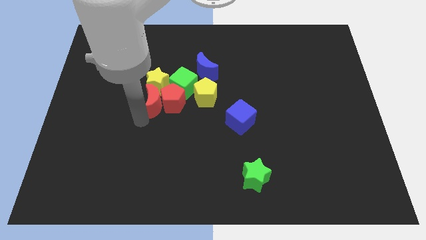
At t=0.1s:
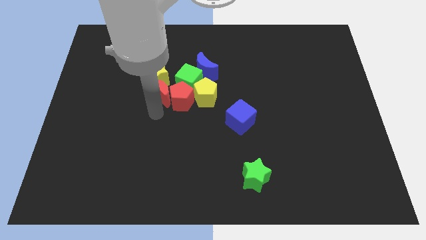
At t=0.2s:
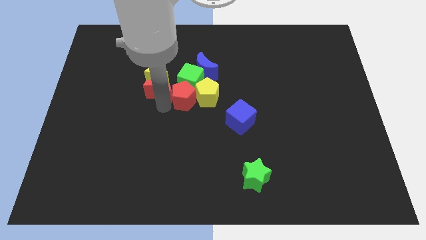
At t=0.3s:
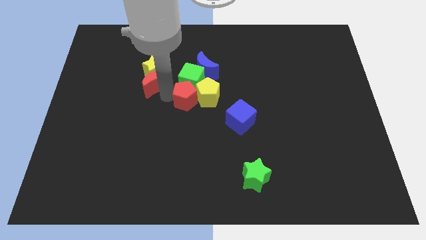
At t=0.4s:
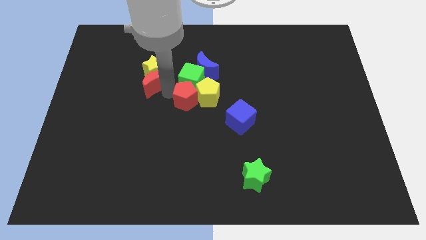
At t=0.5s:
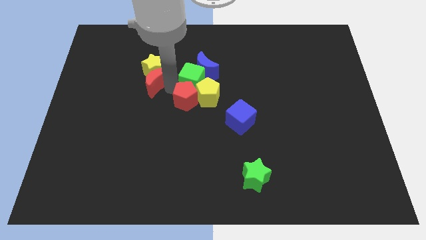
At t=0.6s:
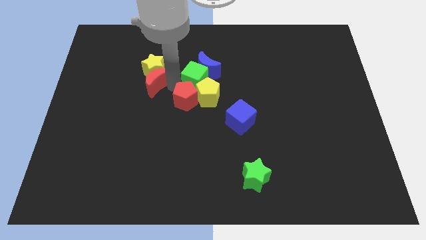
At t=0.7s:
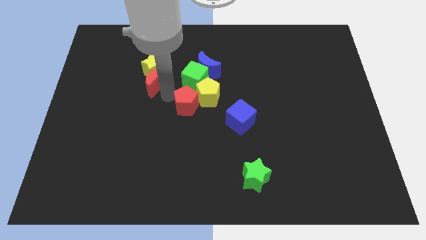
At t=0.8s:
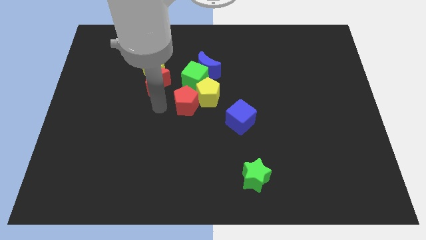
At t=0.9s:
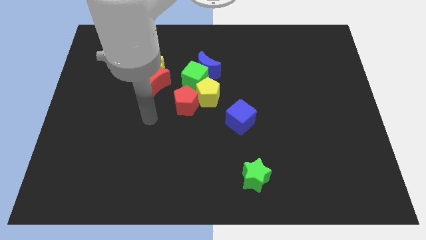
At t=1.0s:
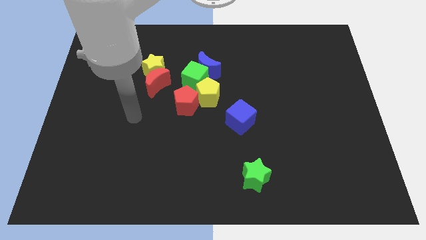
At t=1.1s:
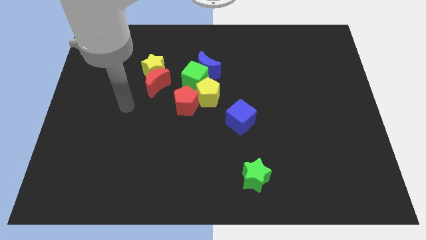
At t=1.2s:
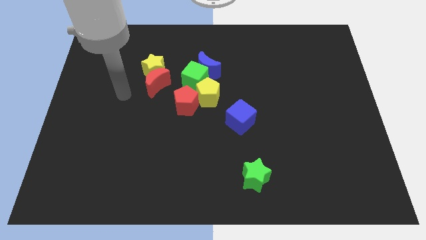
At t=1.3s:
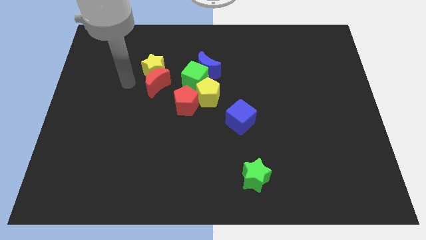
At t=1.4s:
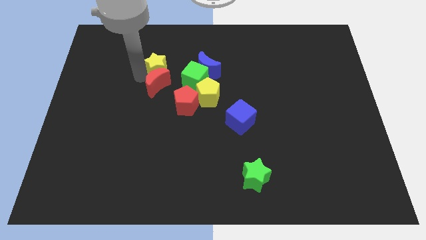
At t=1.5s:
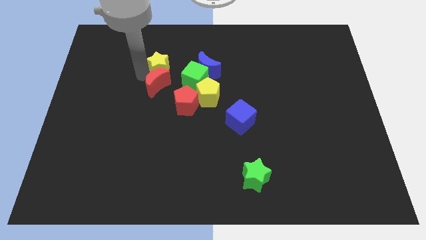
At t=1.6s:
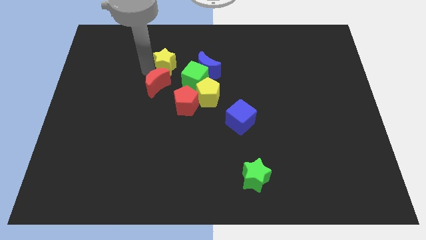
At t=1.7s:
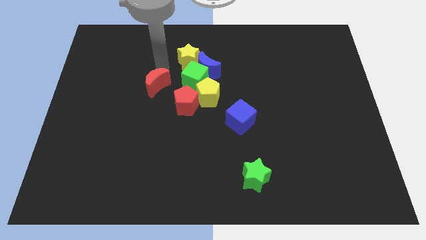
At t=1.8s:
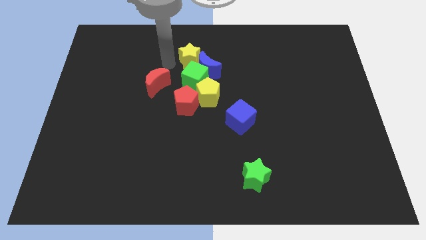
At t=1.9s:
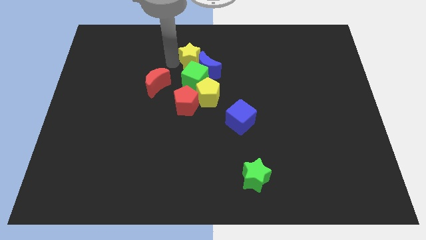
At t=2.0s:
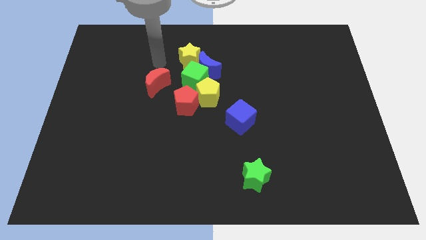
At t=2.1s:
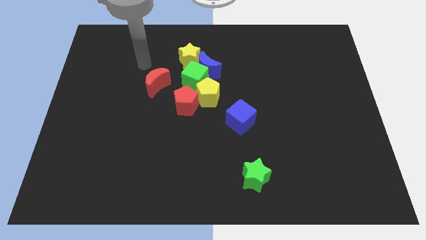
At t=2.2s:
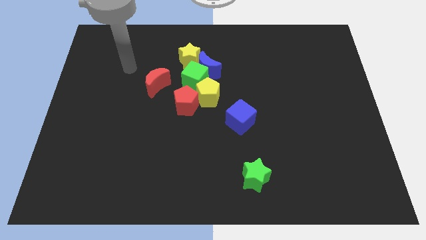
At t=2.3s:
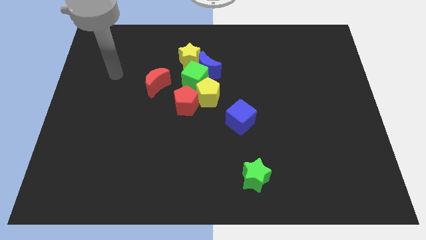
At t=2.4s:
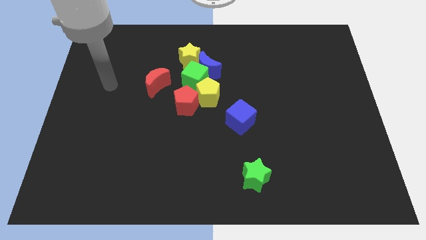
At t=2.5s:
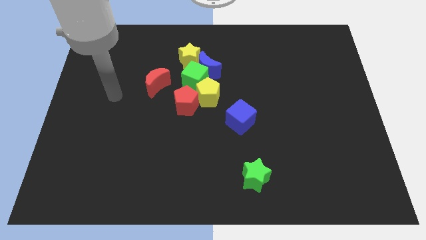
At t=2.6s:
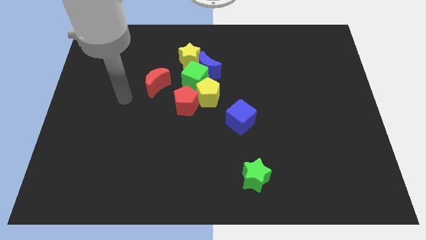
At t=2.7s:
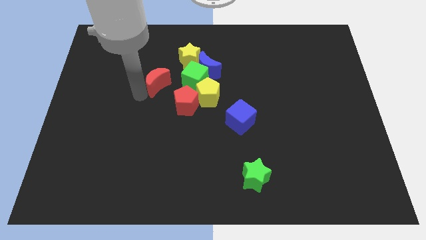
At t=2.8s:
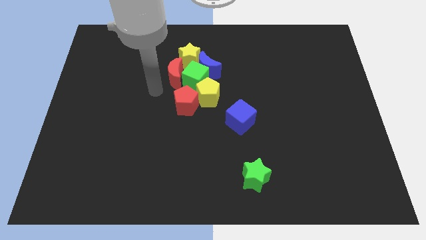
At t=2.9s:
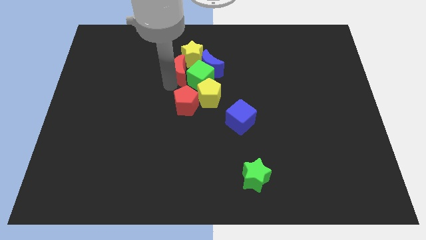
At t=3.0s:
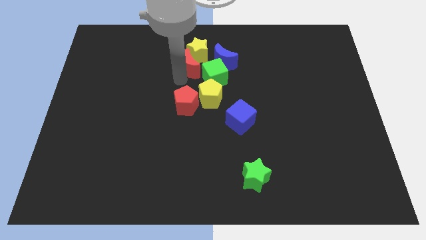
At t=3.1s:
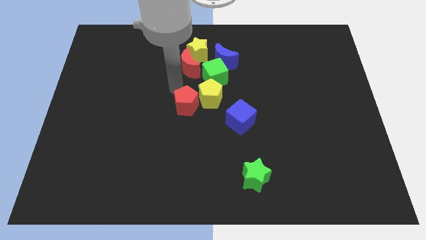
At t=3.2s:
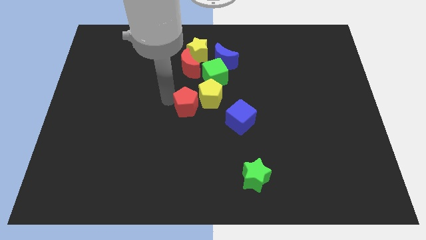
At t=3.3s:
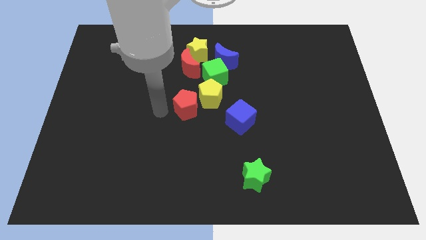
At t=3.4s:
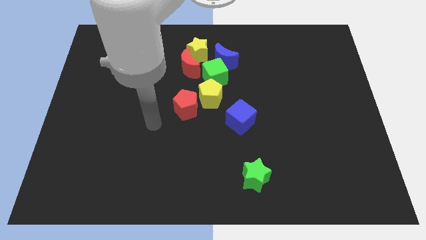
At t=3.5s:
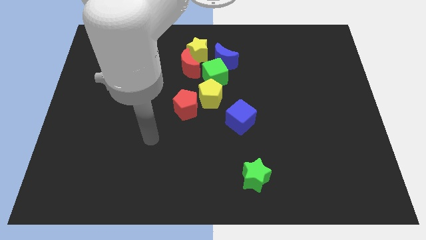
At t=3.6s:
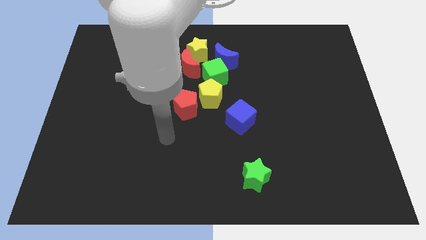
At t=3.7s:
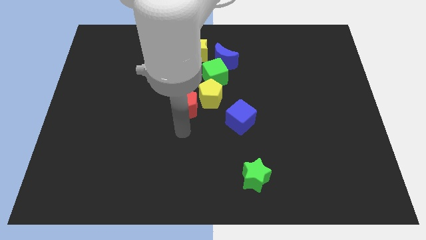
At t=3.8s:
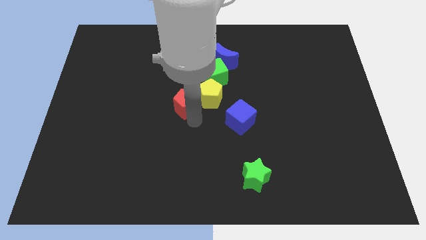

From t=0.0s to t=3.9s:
push the group of blocks towards the top side of the board

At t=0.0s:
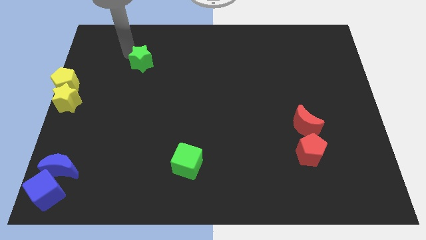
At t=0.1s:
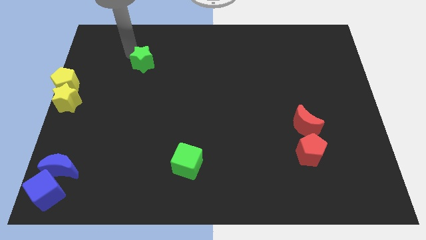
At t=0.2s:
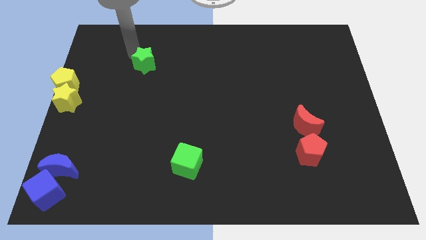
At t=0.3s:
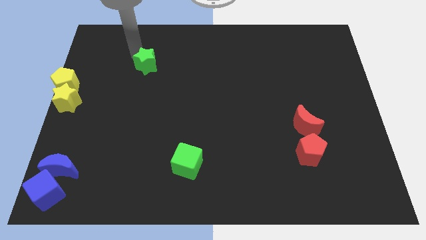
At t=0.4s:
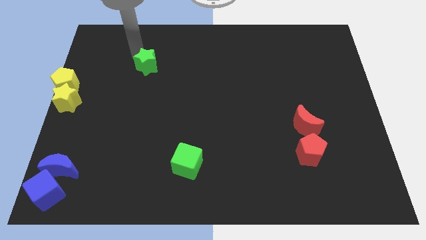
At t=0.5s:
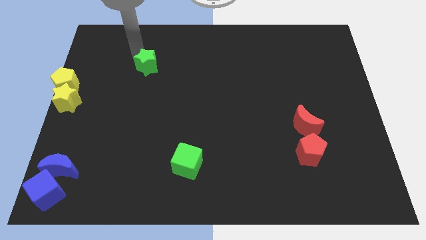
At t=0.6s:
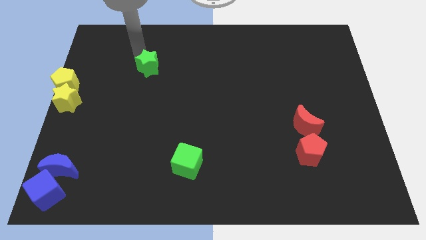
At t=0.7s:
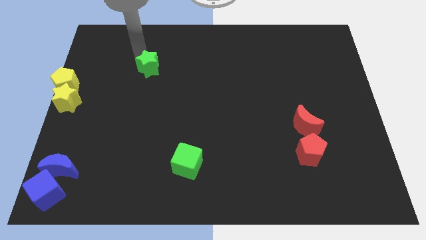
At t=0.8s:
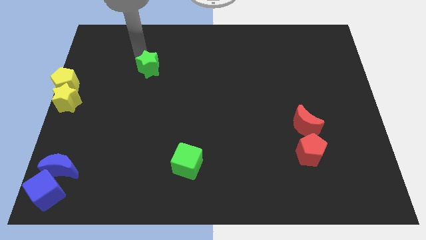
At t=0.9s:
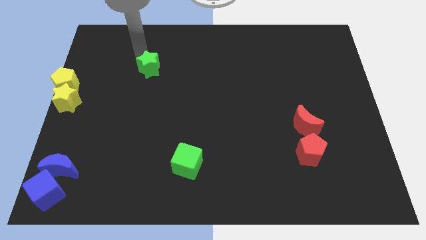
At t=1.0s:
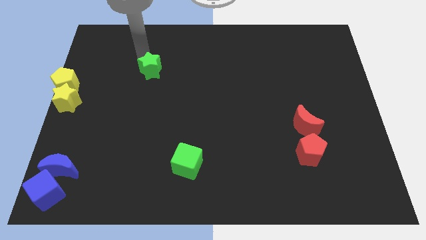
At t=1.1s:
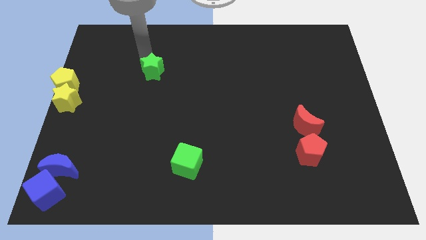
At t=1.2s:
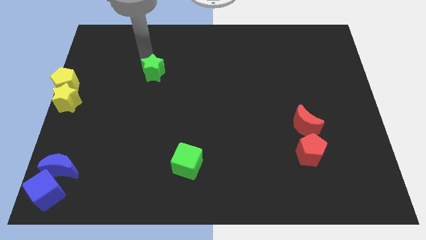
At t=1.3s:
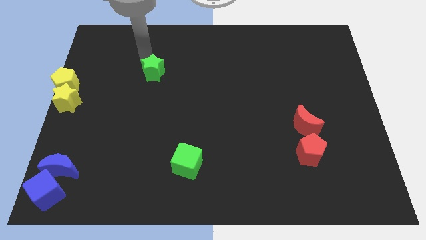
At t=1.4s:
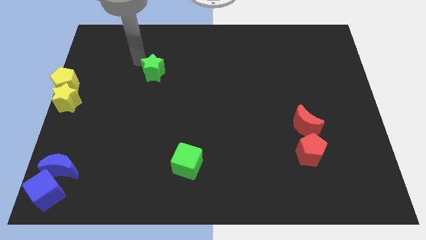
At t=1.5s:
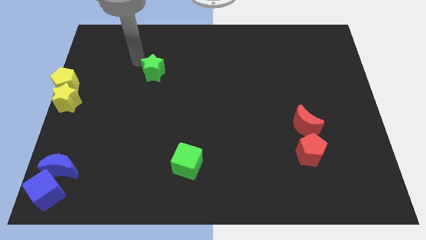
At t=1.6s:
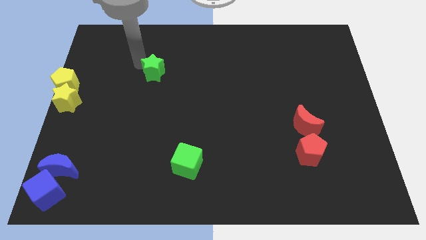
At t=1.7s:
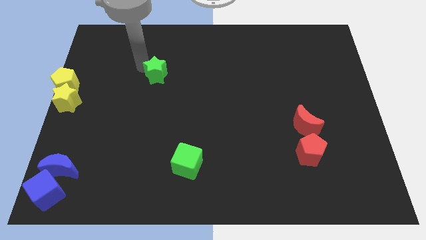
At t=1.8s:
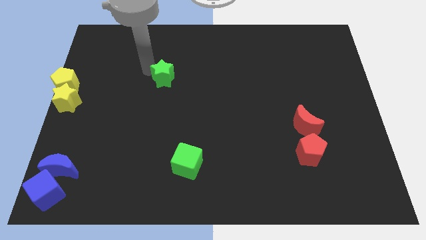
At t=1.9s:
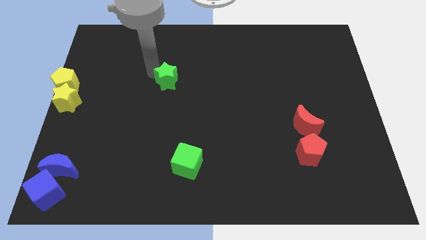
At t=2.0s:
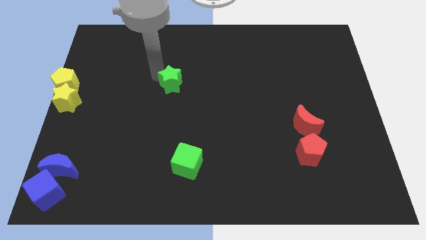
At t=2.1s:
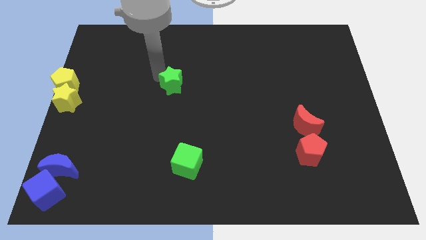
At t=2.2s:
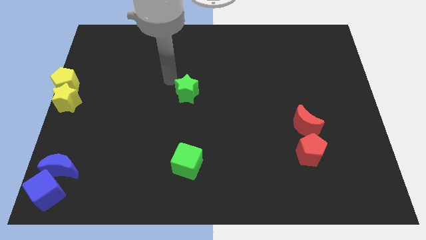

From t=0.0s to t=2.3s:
push the green star towards the green cube

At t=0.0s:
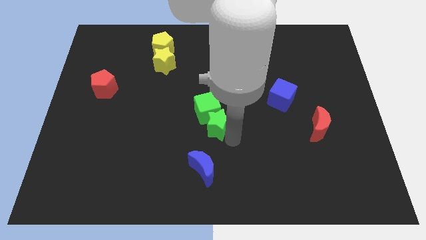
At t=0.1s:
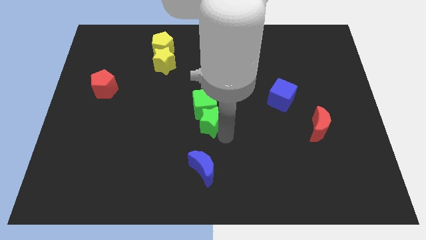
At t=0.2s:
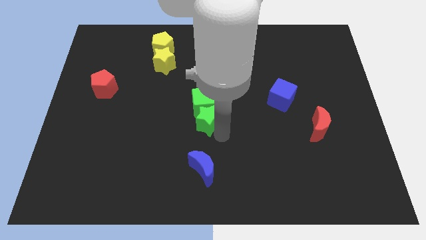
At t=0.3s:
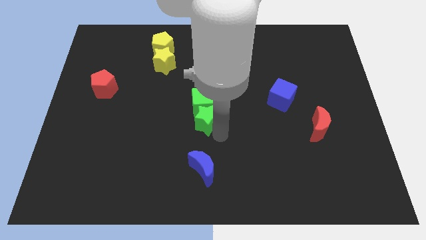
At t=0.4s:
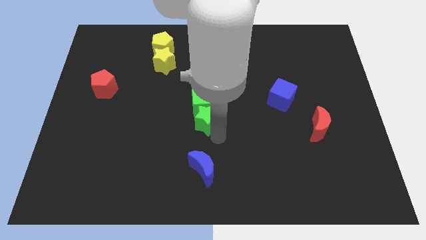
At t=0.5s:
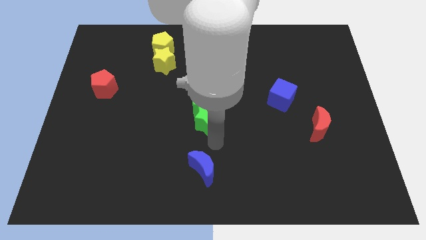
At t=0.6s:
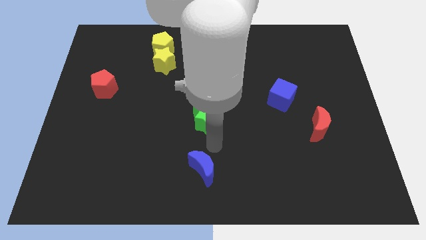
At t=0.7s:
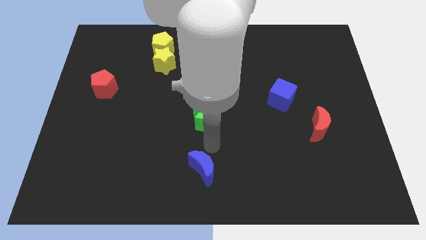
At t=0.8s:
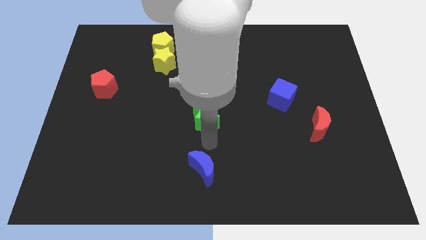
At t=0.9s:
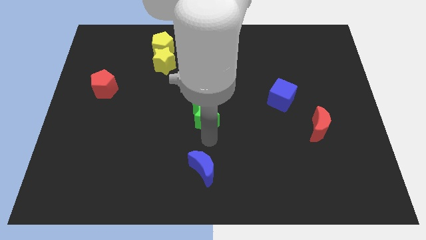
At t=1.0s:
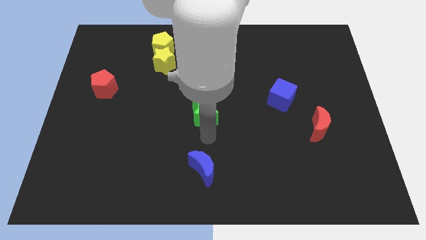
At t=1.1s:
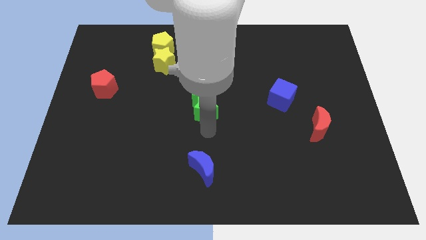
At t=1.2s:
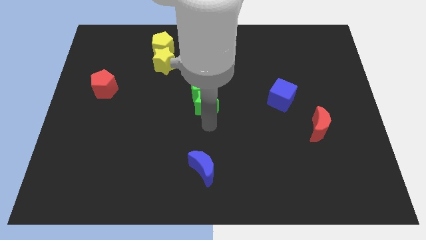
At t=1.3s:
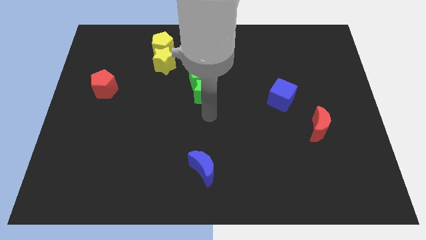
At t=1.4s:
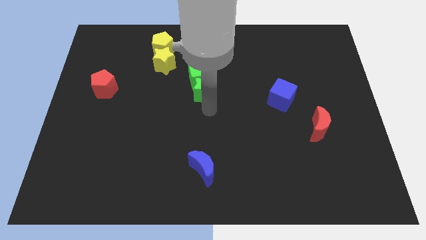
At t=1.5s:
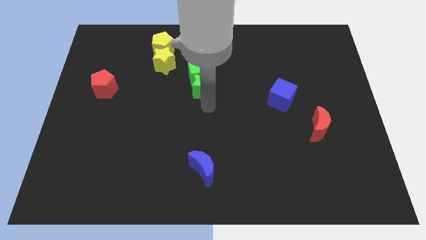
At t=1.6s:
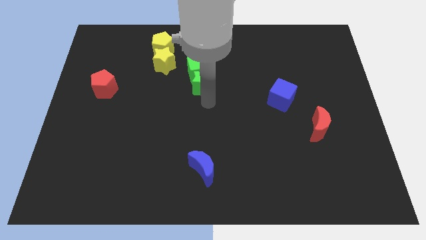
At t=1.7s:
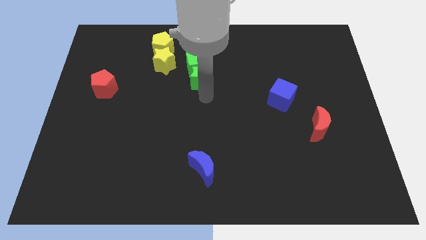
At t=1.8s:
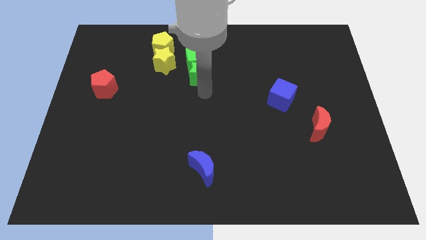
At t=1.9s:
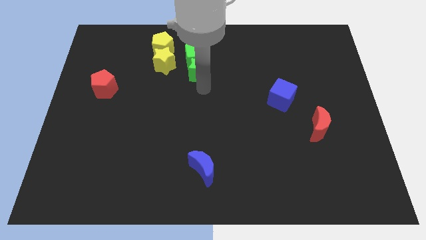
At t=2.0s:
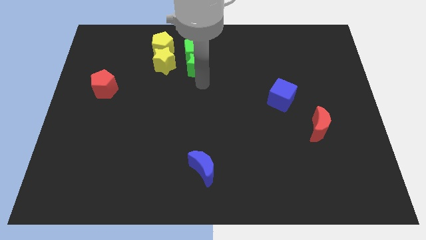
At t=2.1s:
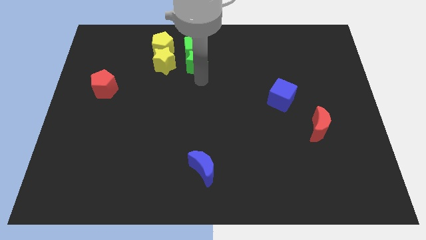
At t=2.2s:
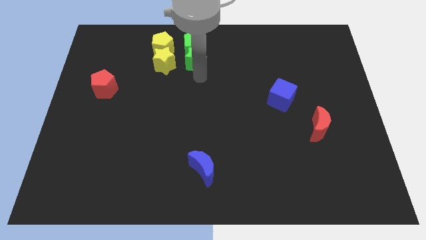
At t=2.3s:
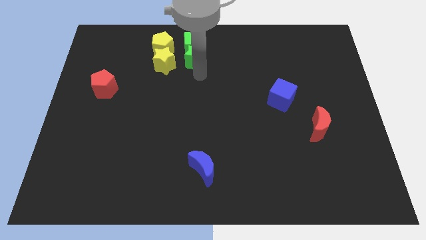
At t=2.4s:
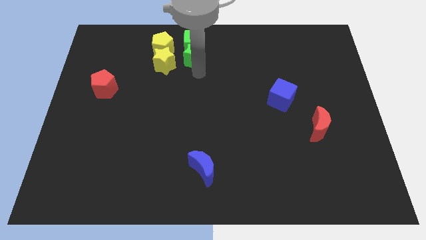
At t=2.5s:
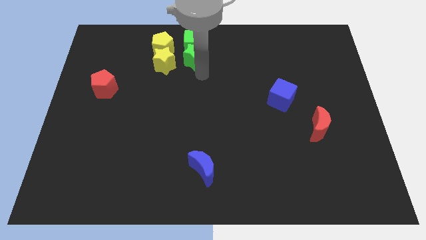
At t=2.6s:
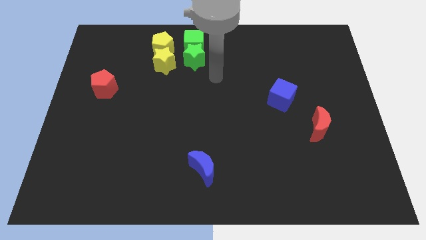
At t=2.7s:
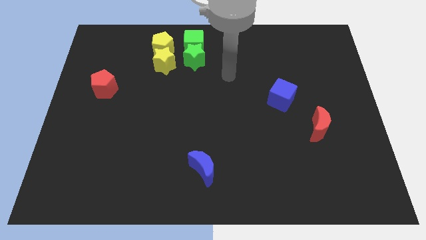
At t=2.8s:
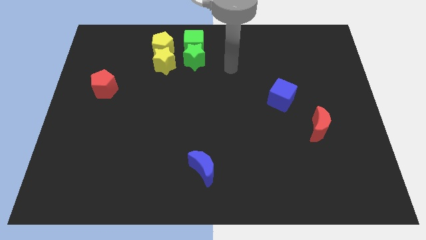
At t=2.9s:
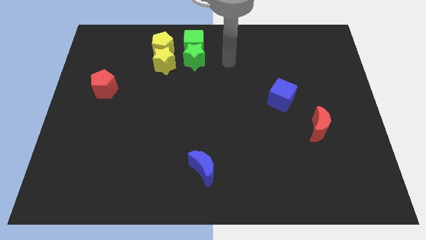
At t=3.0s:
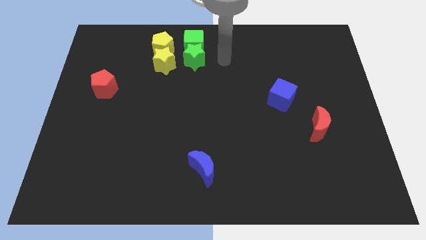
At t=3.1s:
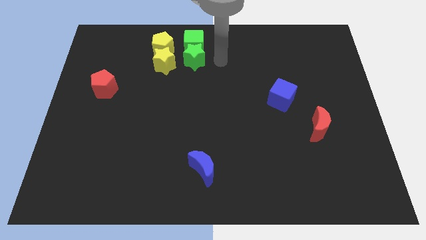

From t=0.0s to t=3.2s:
place green blocks to the top left of the board
